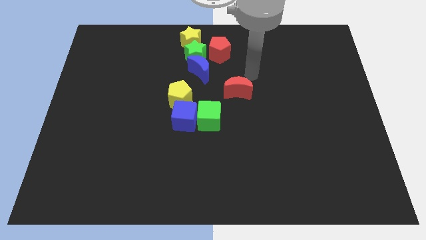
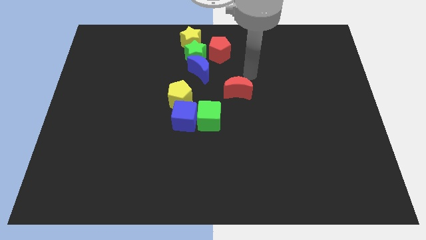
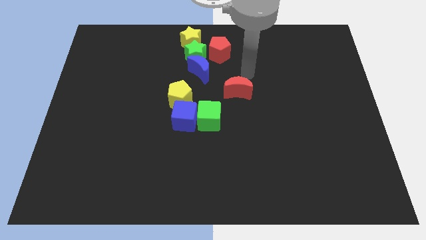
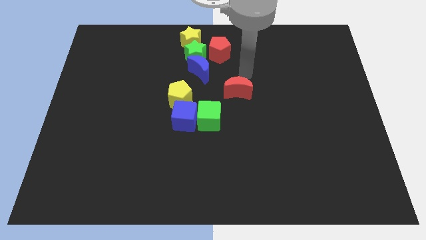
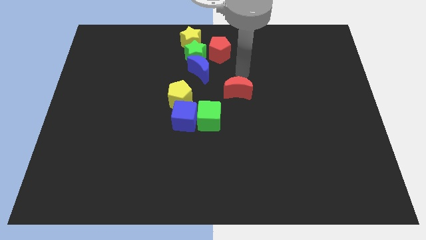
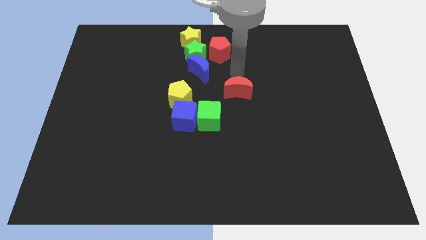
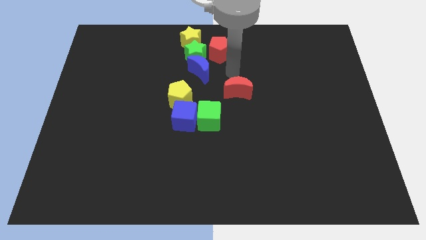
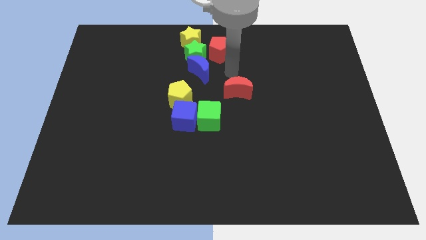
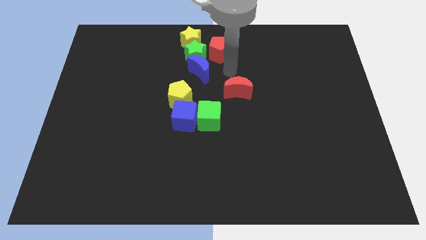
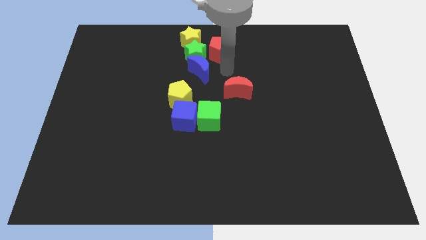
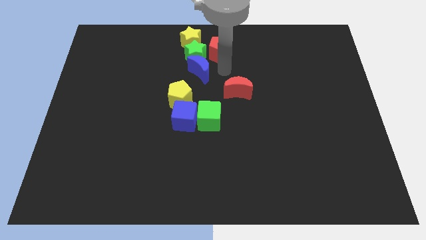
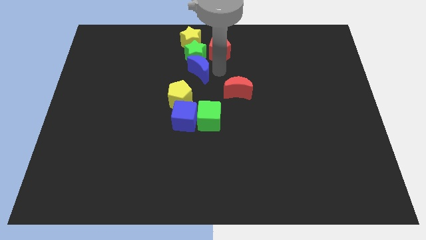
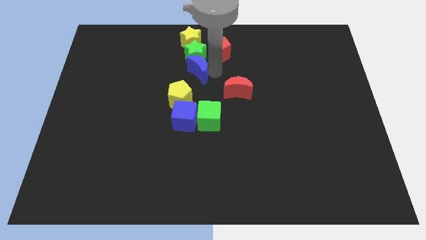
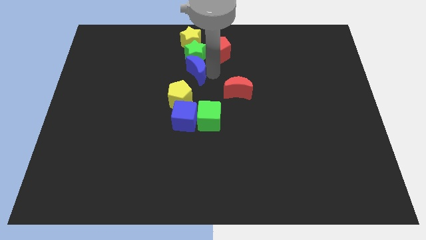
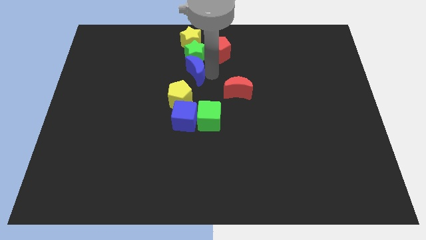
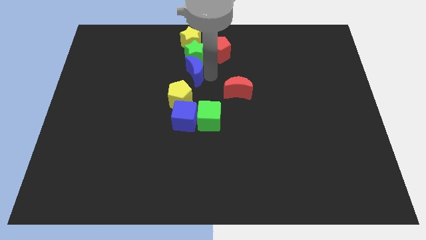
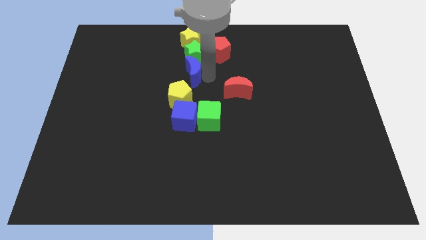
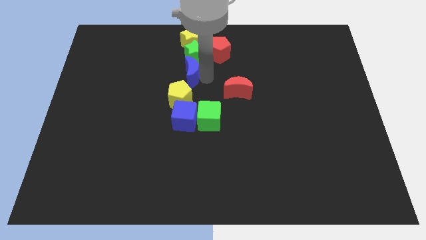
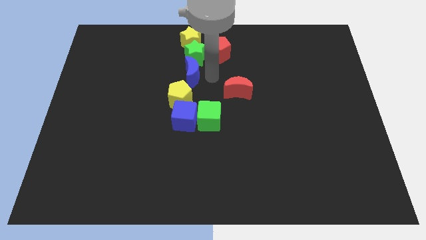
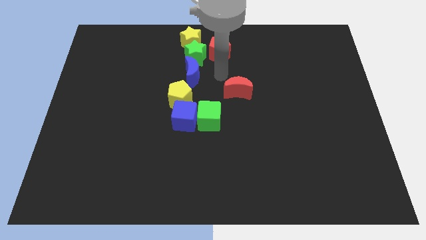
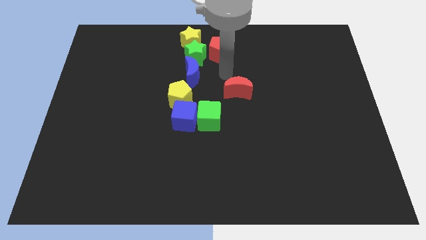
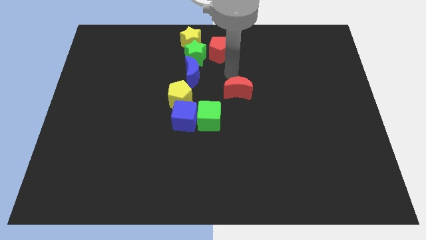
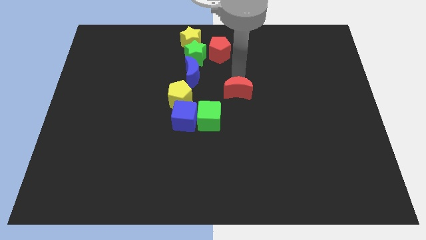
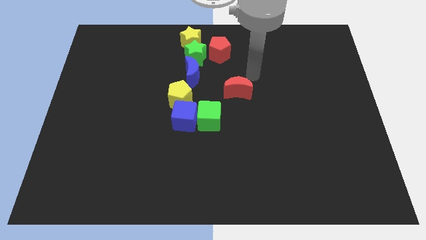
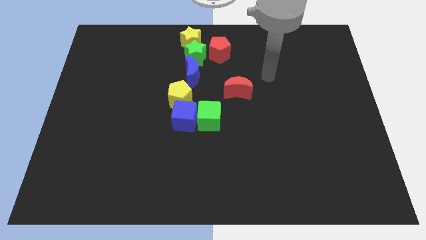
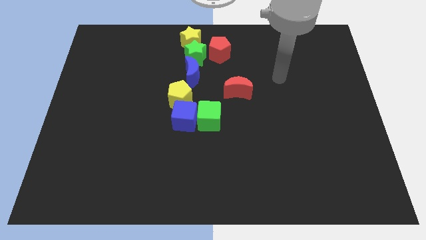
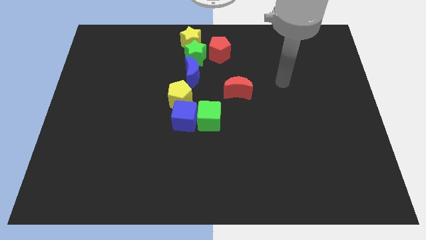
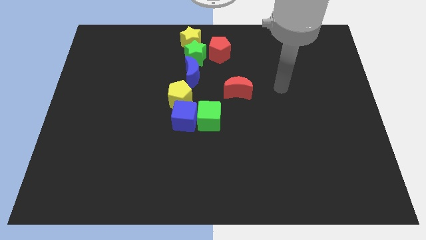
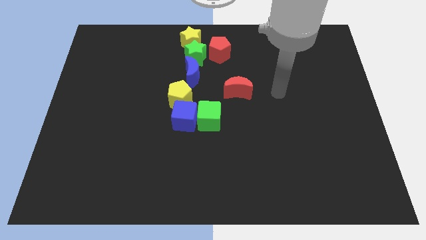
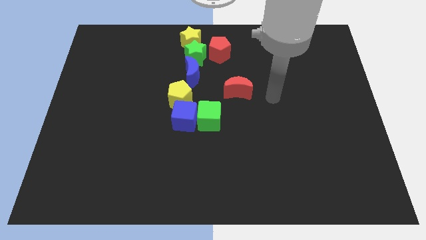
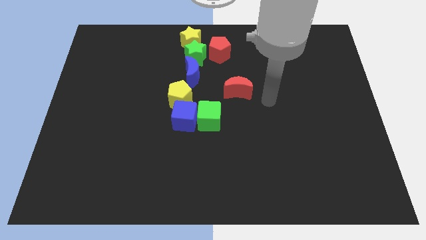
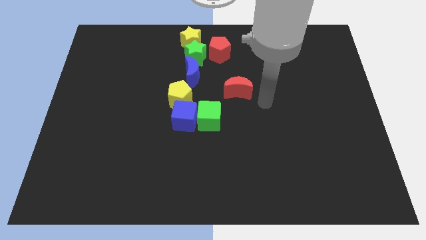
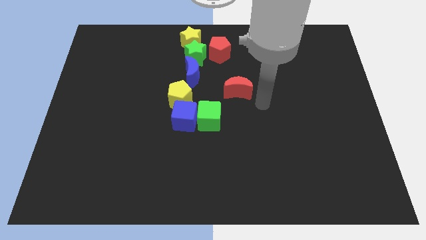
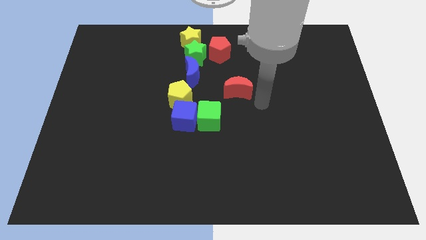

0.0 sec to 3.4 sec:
move blue crescent near to yellow pentagon

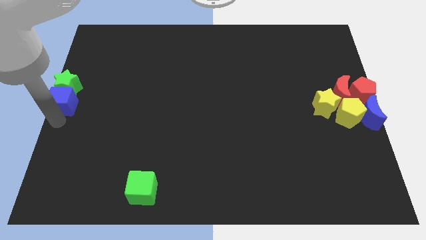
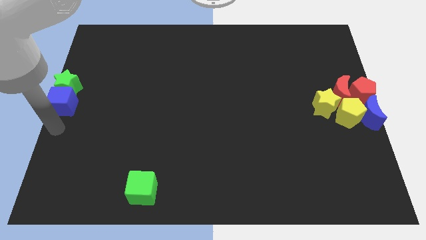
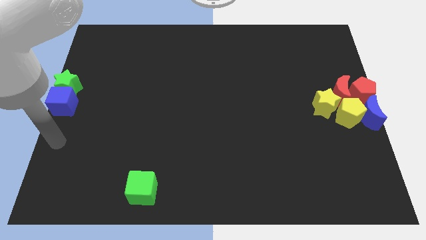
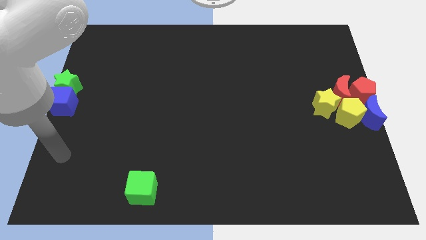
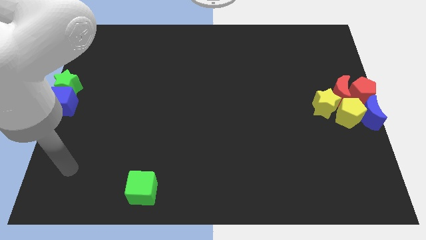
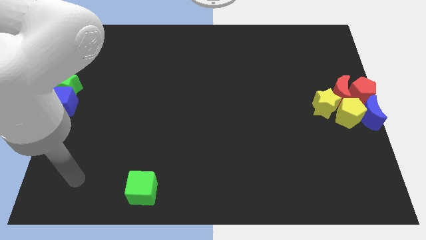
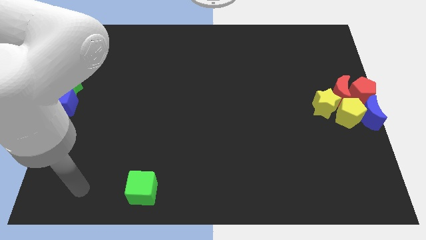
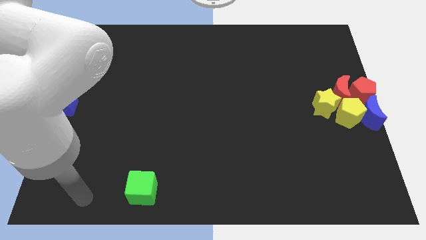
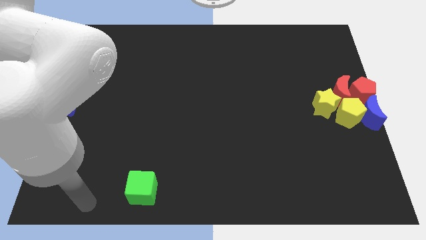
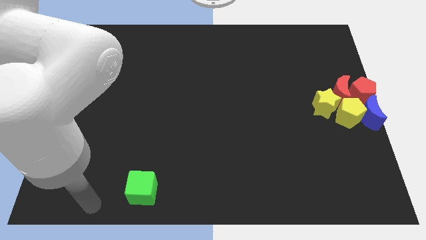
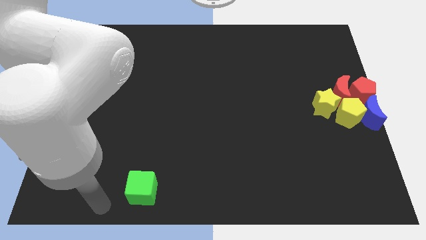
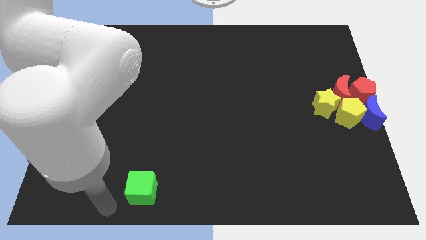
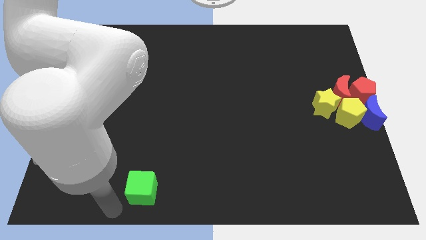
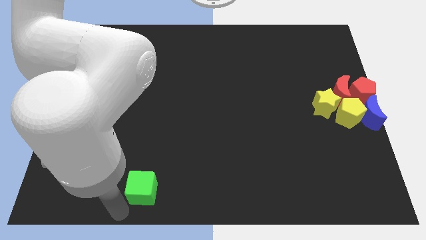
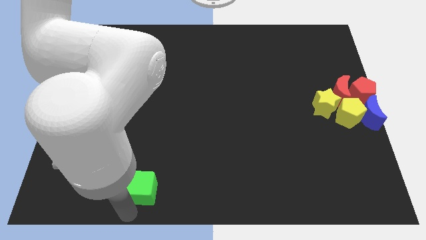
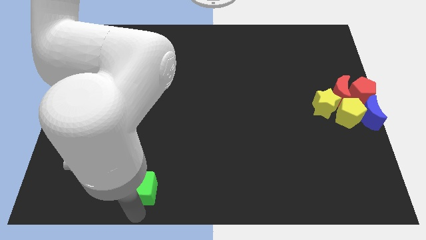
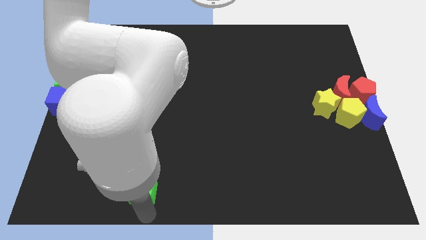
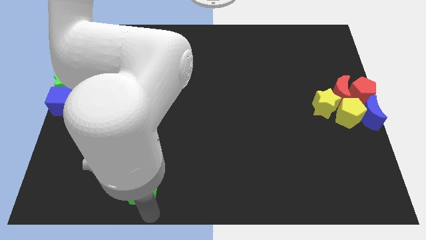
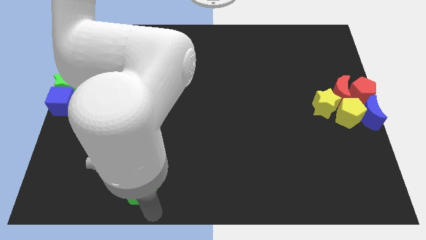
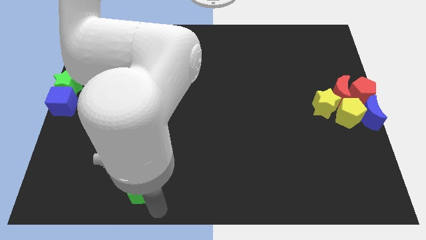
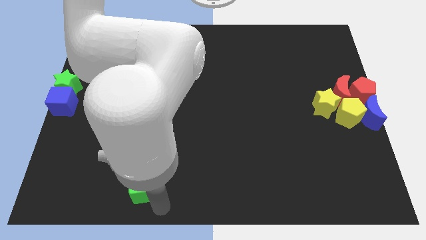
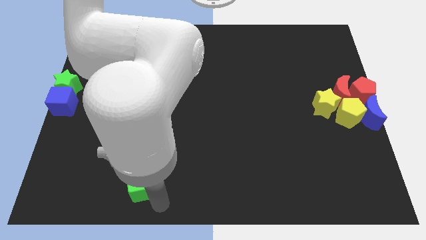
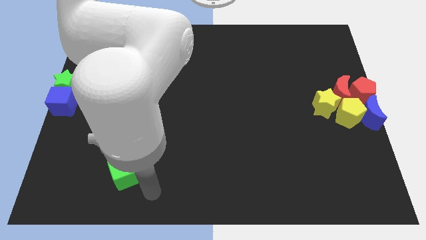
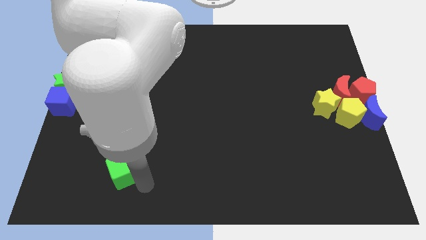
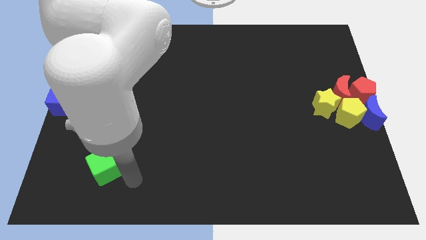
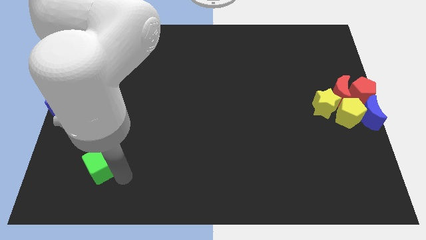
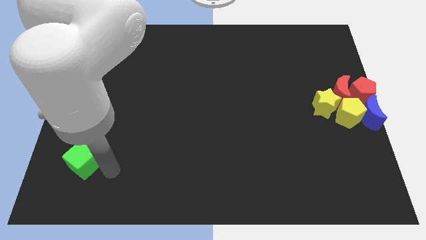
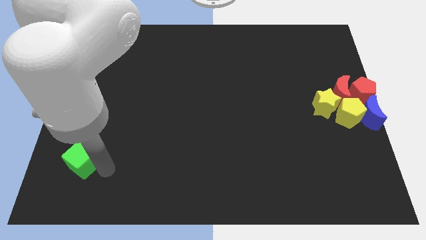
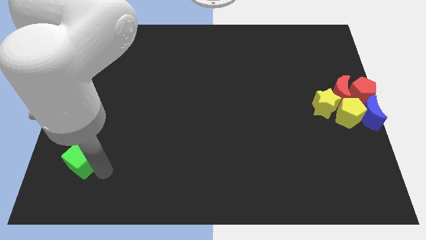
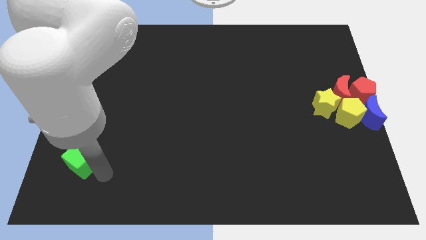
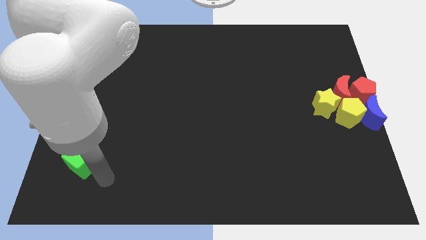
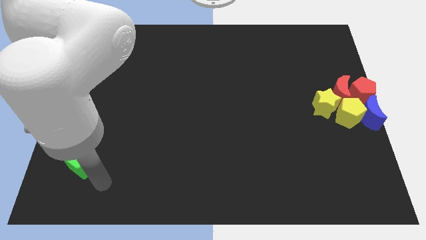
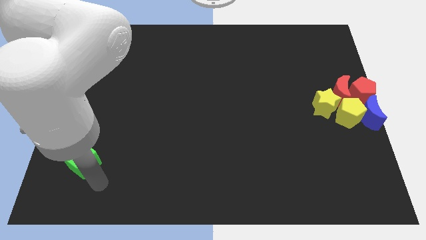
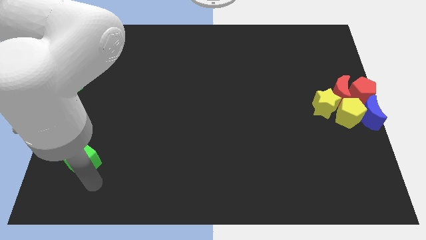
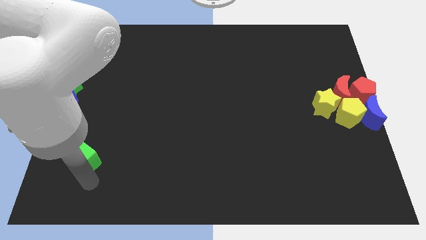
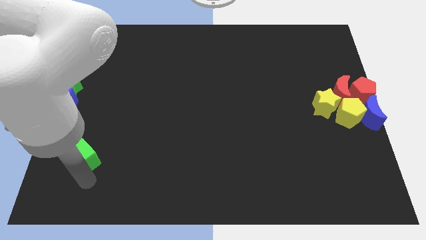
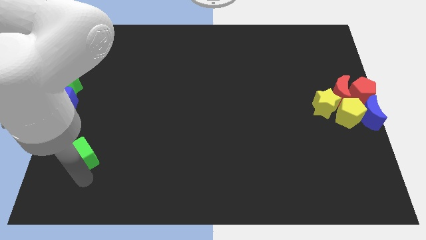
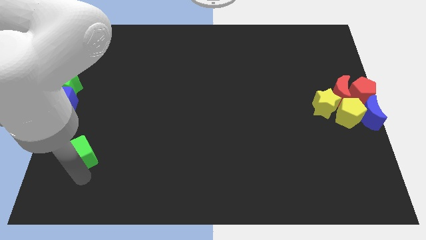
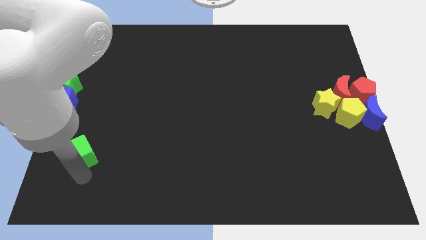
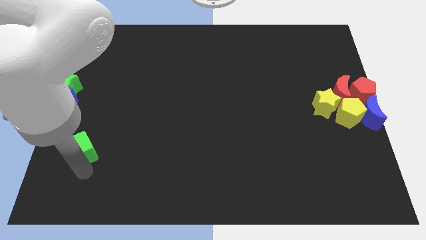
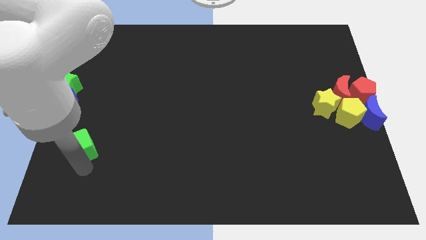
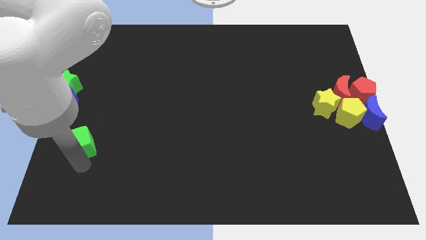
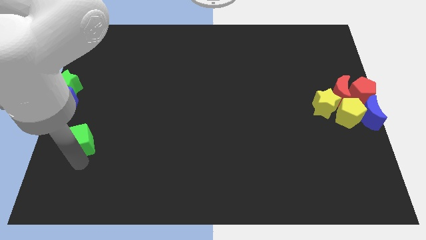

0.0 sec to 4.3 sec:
move the green cube towards the blue cube

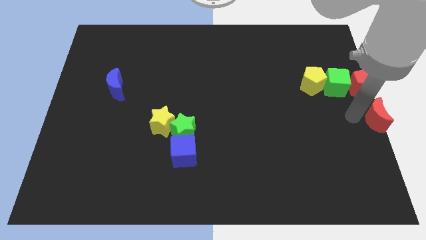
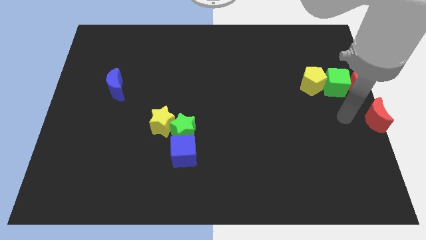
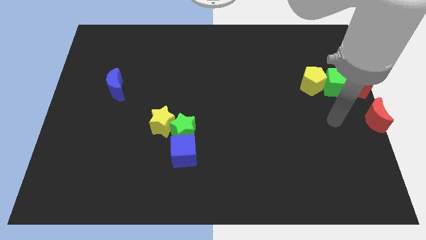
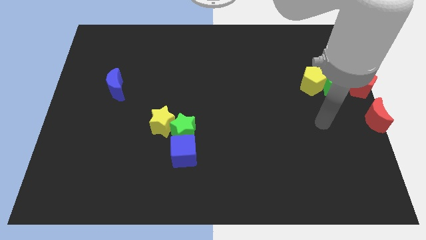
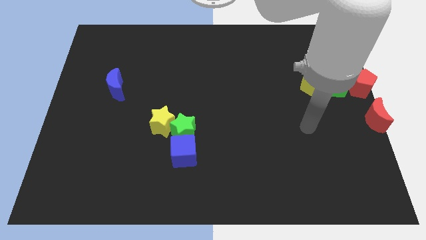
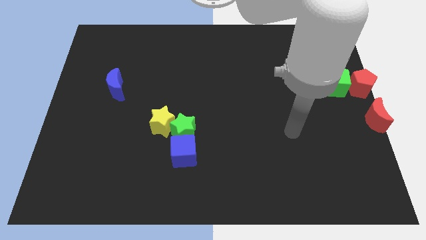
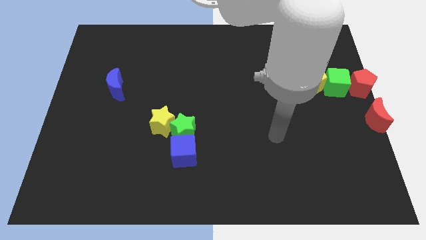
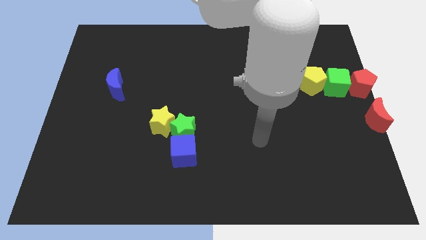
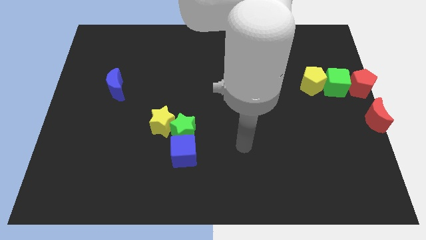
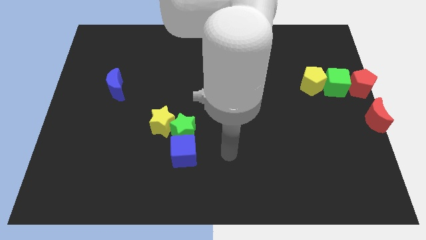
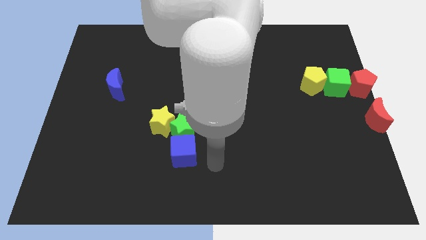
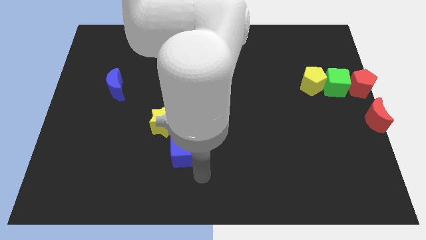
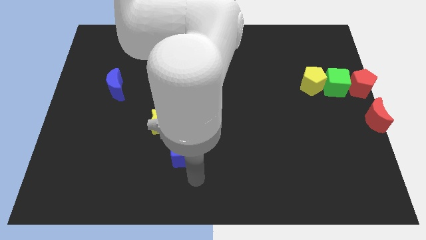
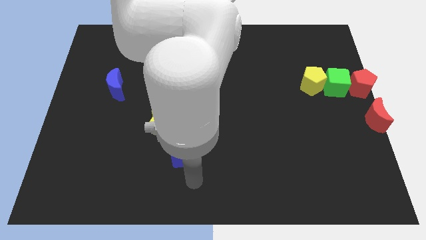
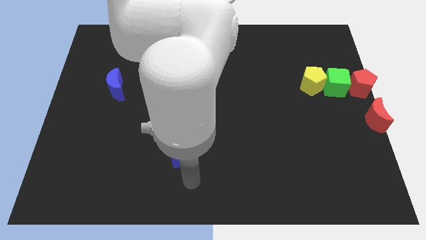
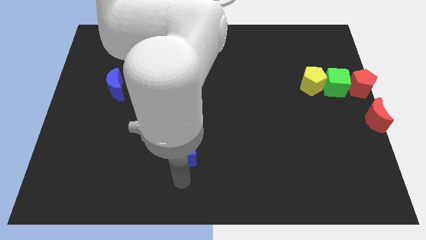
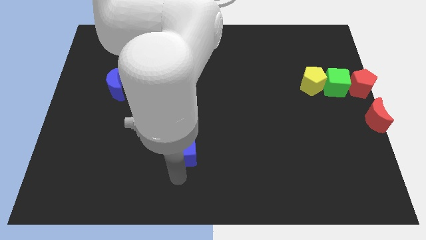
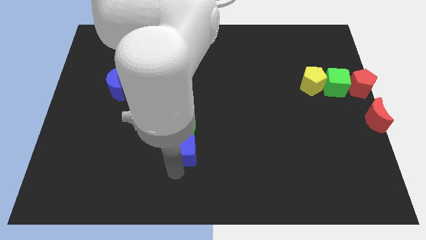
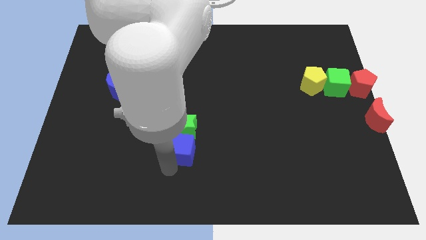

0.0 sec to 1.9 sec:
move your arm towards blue cube
